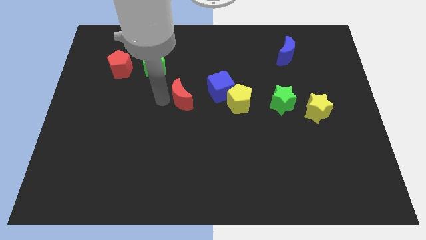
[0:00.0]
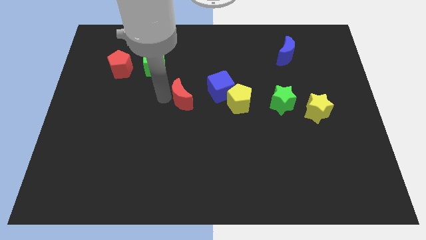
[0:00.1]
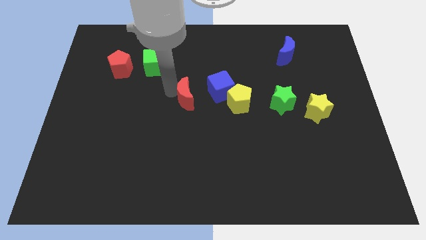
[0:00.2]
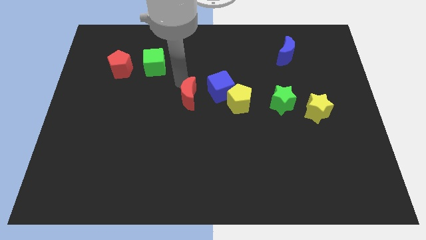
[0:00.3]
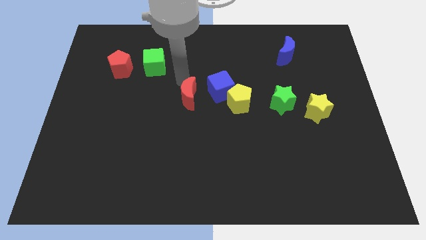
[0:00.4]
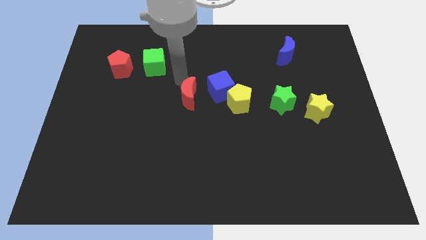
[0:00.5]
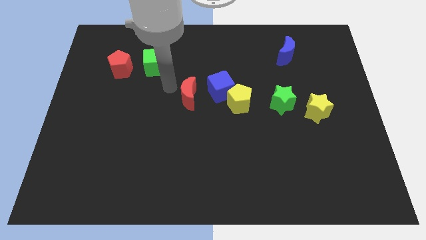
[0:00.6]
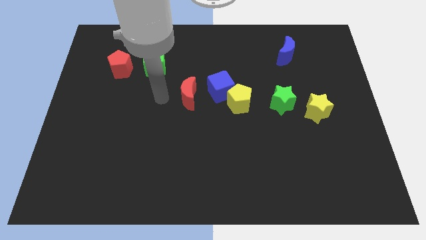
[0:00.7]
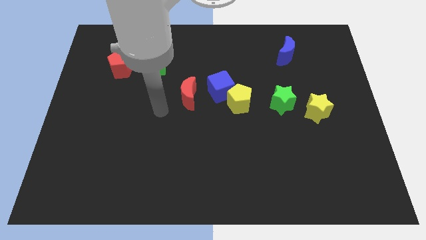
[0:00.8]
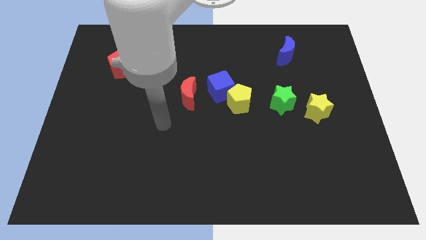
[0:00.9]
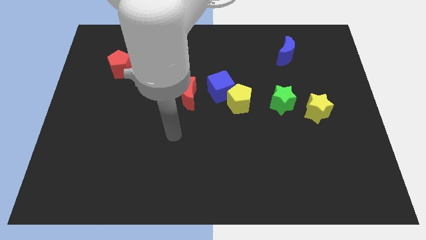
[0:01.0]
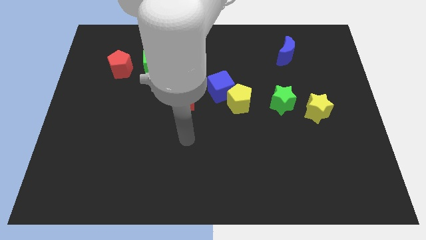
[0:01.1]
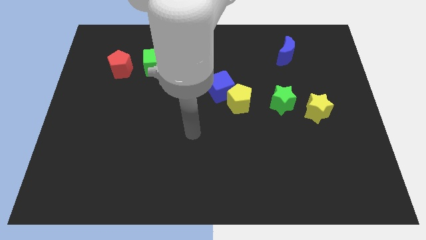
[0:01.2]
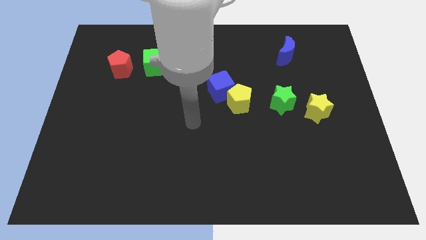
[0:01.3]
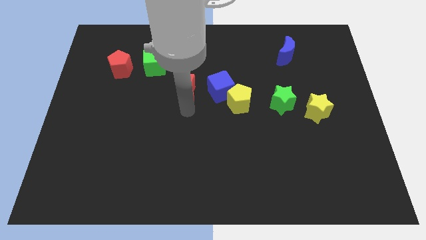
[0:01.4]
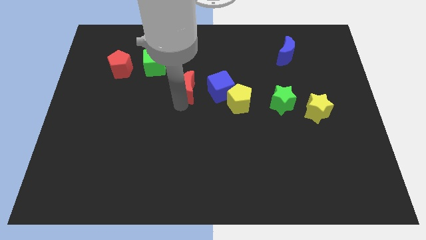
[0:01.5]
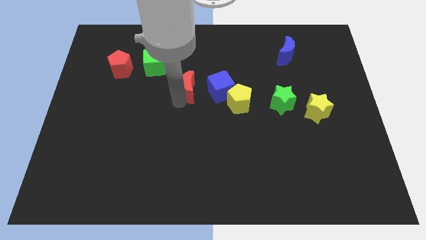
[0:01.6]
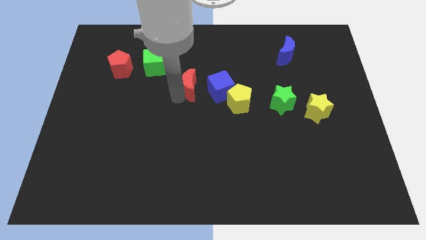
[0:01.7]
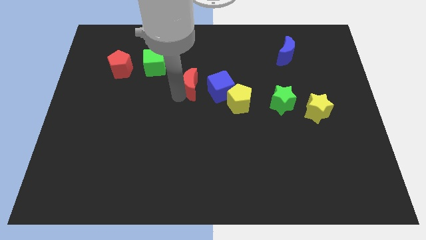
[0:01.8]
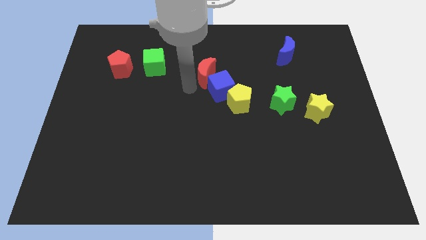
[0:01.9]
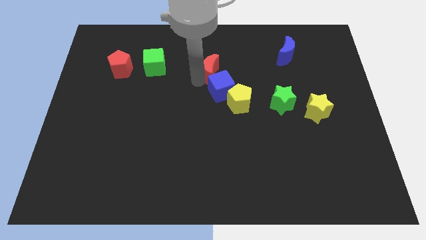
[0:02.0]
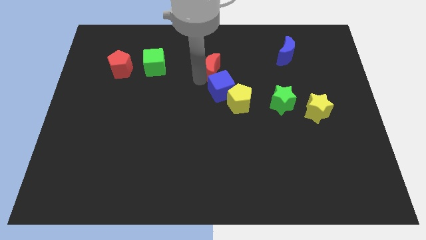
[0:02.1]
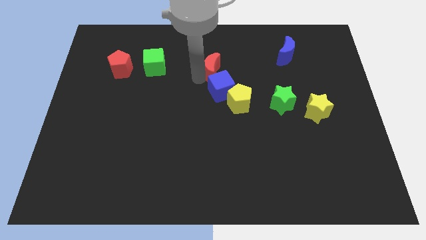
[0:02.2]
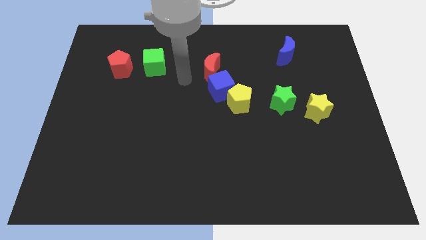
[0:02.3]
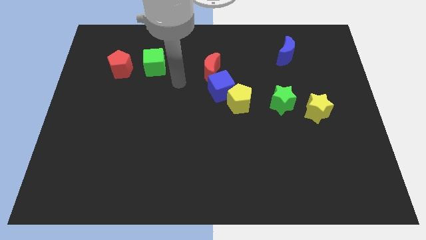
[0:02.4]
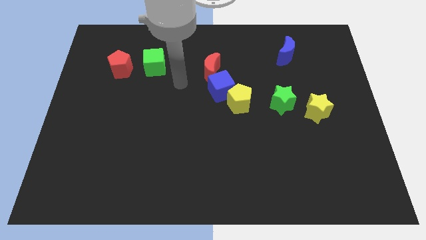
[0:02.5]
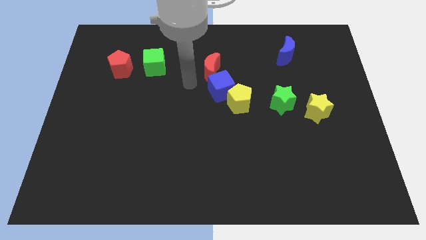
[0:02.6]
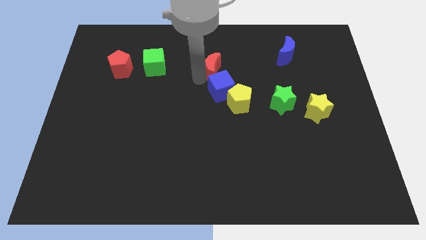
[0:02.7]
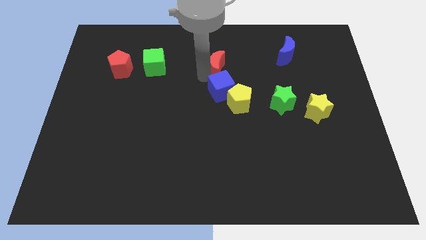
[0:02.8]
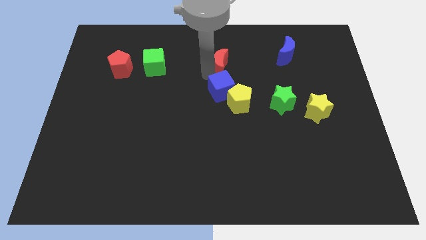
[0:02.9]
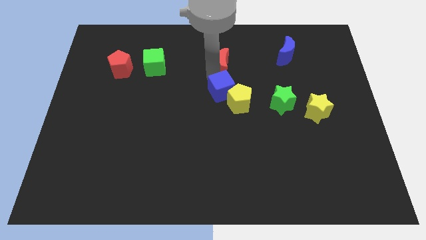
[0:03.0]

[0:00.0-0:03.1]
place the red crescent at the top of the blue cube

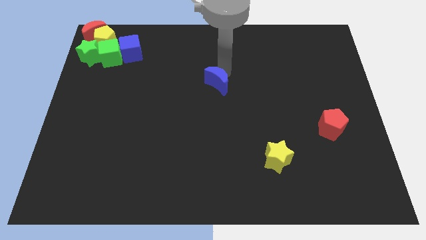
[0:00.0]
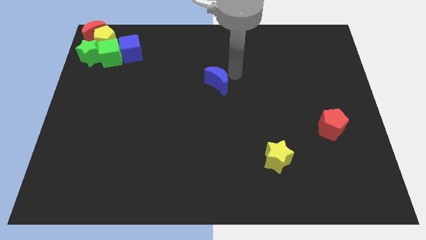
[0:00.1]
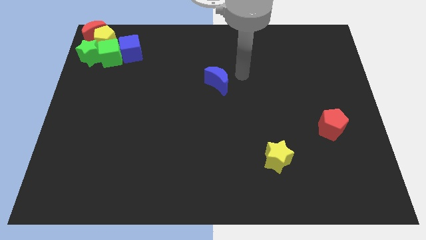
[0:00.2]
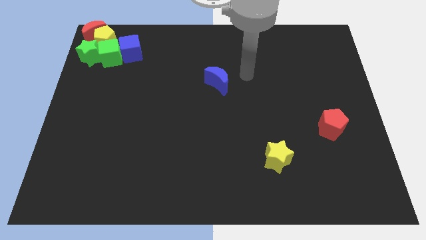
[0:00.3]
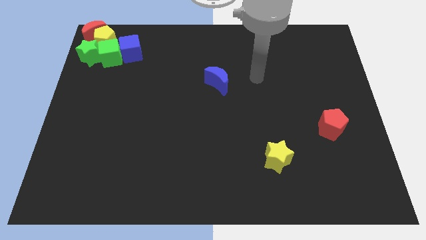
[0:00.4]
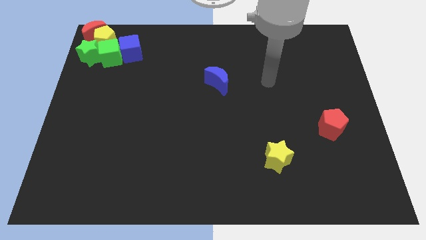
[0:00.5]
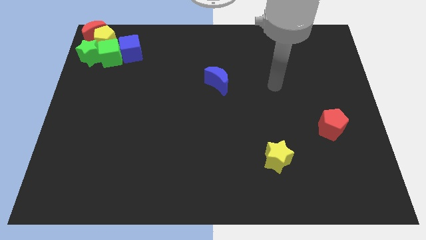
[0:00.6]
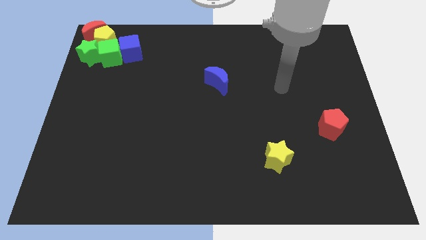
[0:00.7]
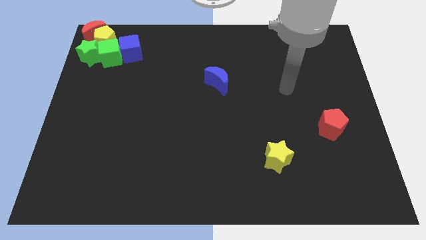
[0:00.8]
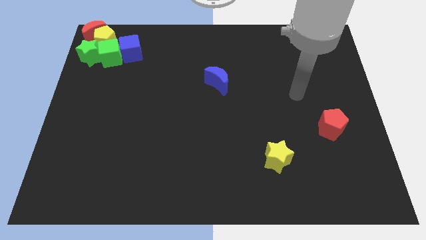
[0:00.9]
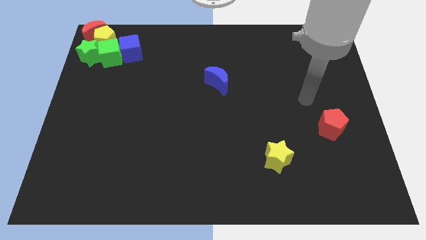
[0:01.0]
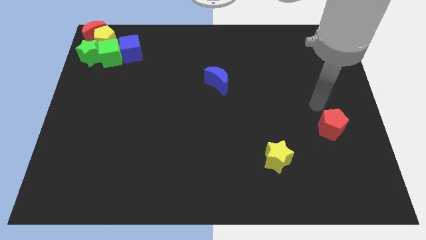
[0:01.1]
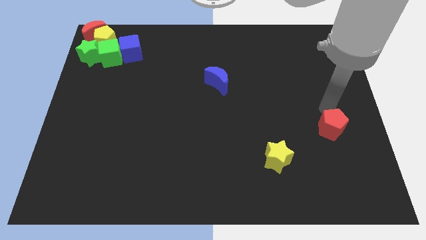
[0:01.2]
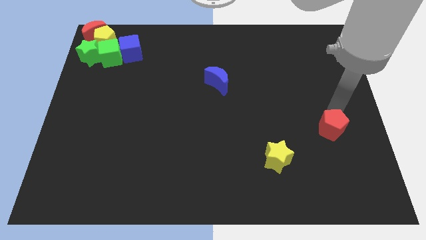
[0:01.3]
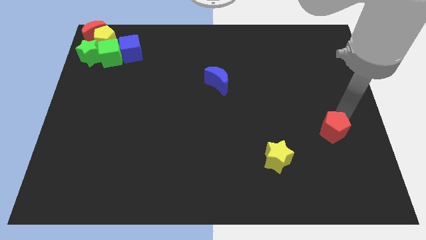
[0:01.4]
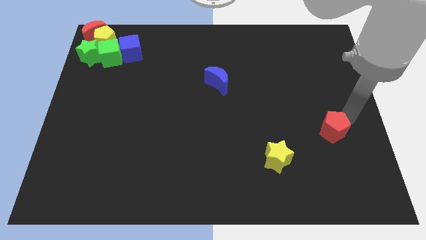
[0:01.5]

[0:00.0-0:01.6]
put your hand to touch the top right of the red pentagon

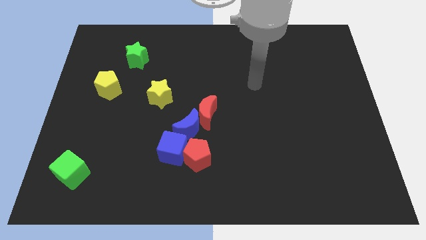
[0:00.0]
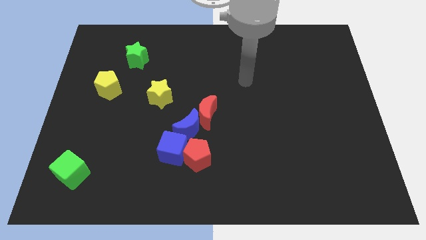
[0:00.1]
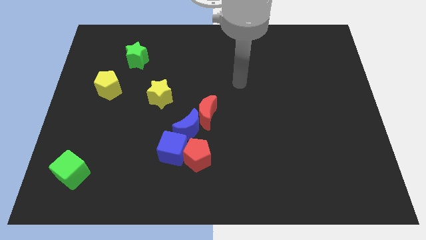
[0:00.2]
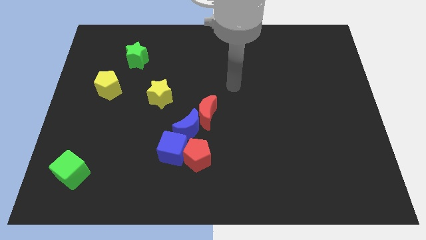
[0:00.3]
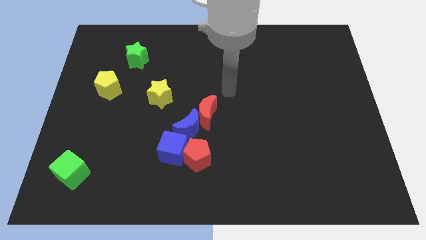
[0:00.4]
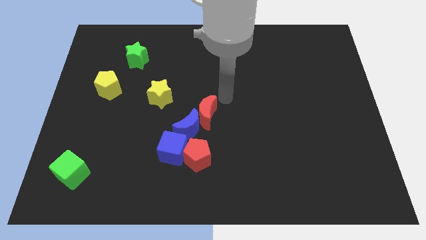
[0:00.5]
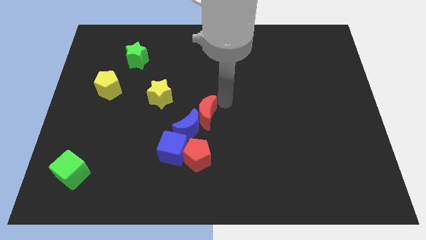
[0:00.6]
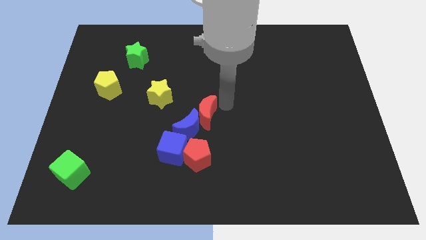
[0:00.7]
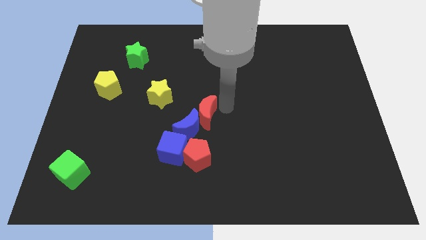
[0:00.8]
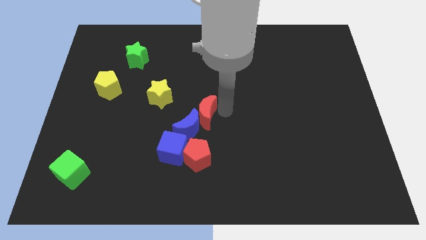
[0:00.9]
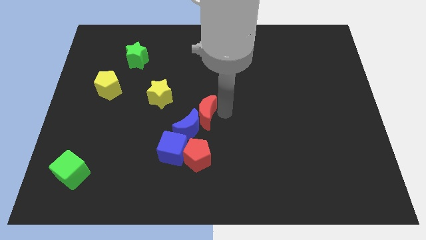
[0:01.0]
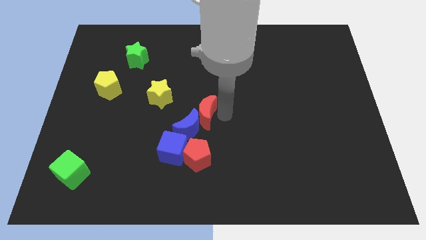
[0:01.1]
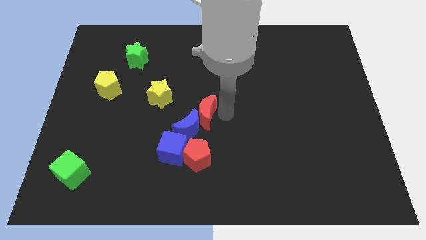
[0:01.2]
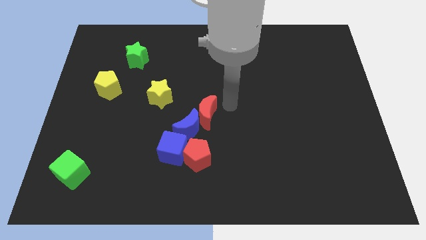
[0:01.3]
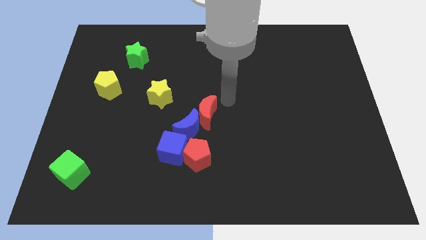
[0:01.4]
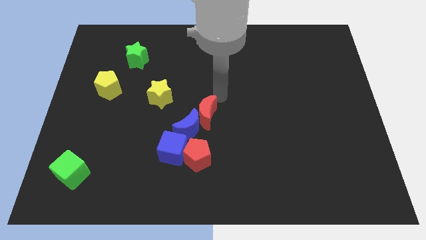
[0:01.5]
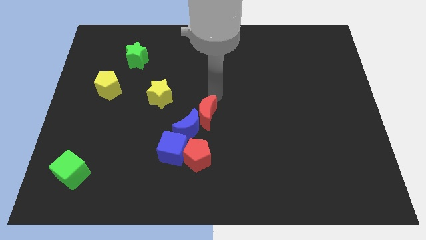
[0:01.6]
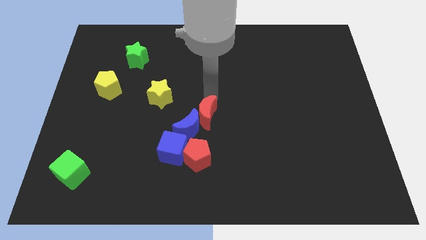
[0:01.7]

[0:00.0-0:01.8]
point your arm above the red moon

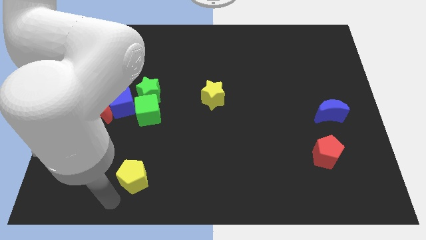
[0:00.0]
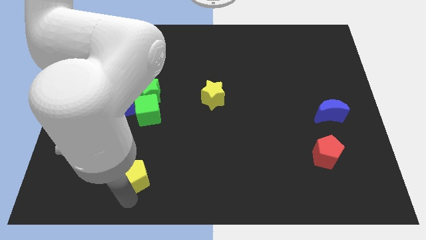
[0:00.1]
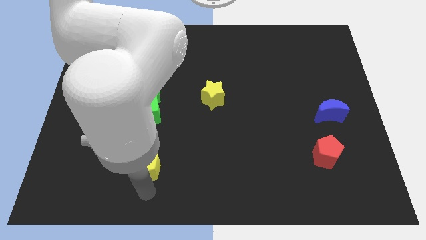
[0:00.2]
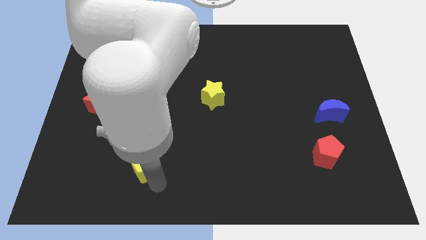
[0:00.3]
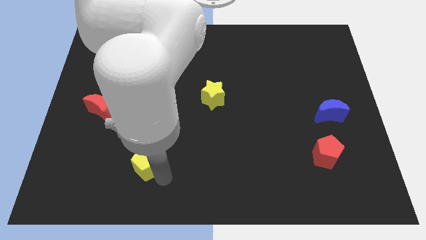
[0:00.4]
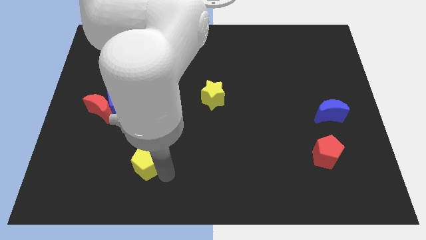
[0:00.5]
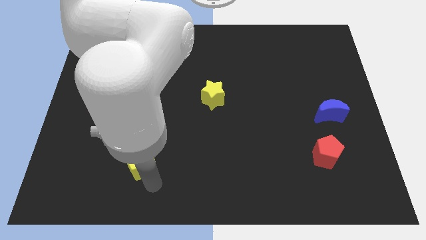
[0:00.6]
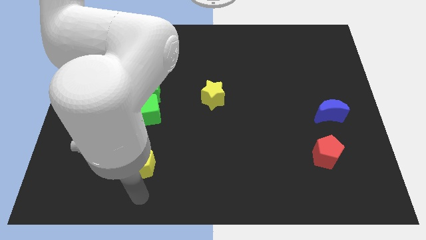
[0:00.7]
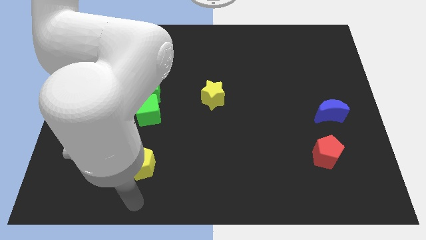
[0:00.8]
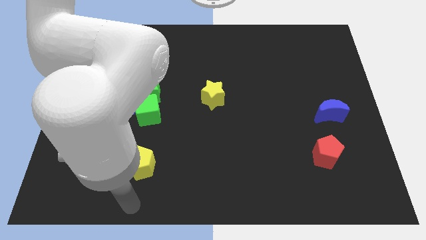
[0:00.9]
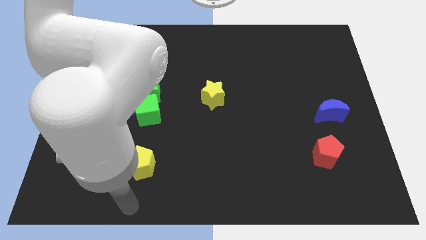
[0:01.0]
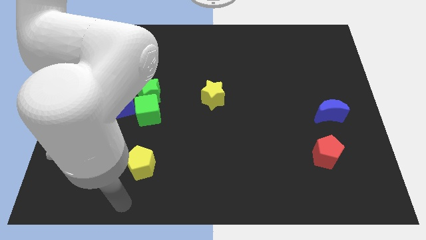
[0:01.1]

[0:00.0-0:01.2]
move the yellow pentagon to the bottom of the green cube

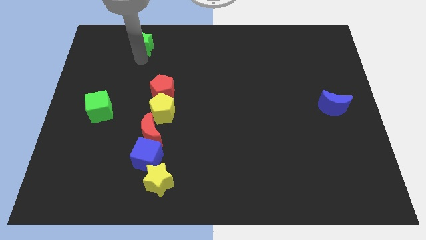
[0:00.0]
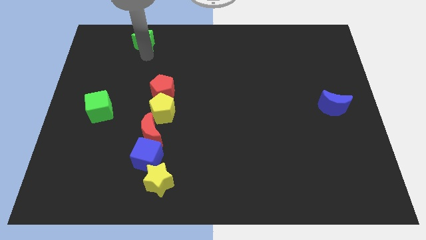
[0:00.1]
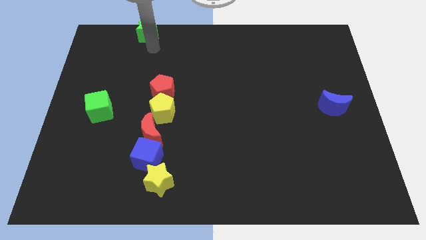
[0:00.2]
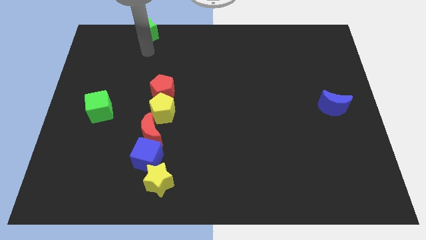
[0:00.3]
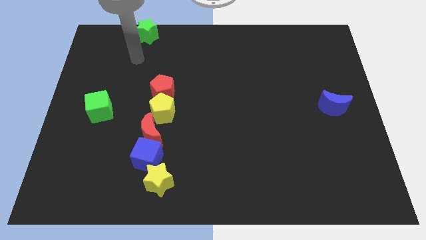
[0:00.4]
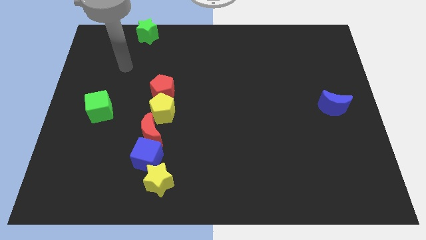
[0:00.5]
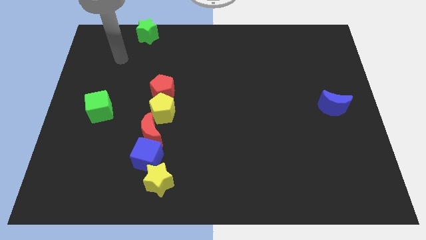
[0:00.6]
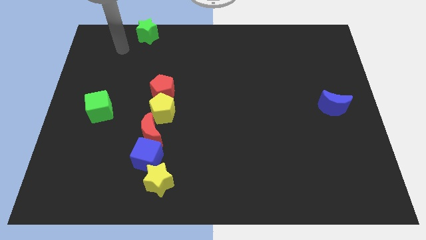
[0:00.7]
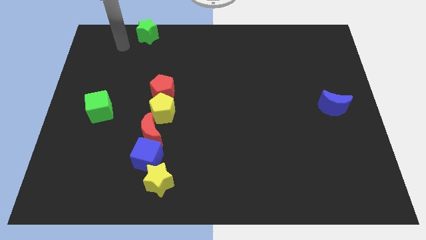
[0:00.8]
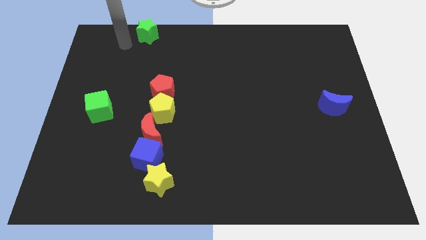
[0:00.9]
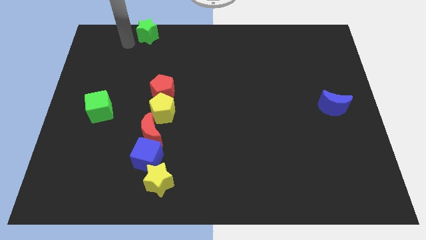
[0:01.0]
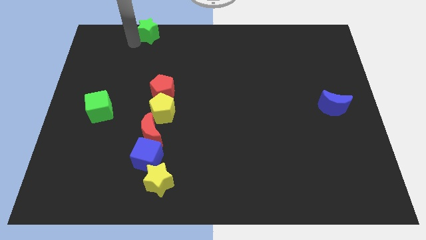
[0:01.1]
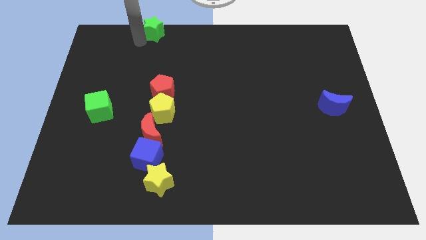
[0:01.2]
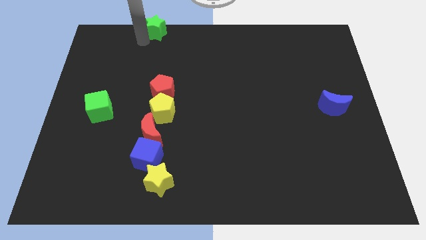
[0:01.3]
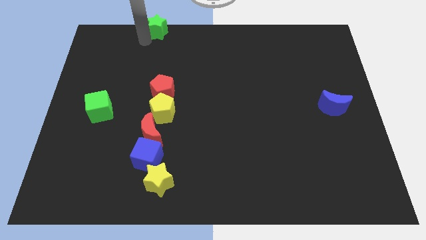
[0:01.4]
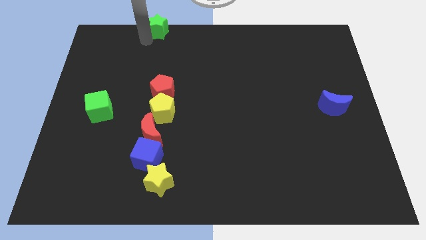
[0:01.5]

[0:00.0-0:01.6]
push the green star towards the top side of the table
